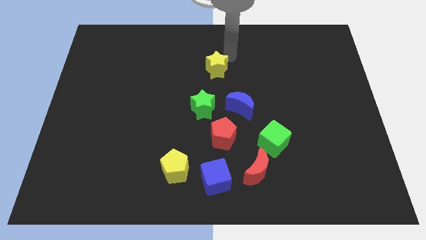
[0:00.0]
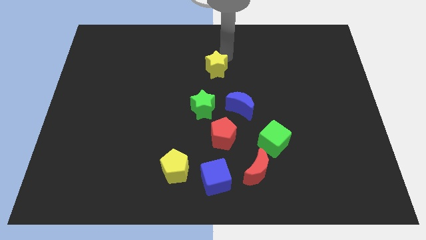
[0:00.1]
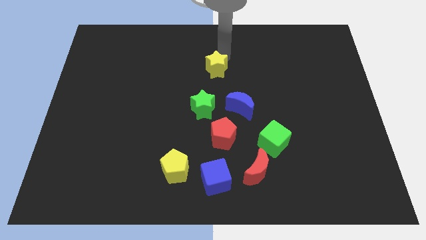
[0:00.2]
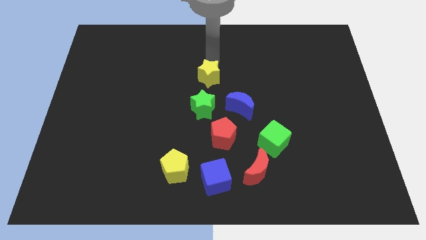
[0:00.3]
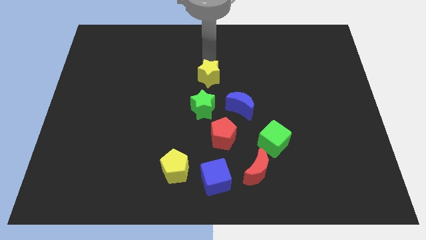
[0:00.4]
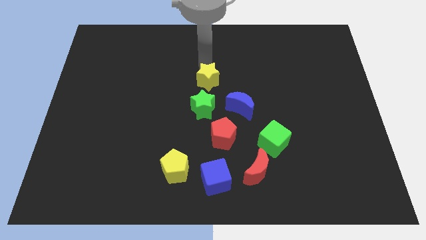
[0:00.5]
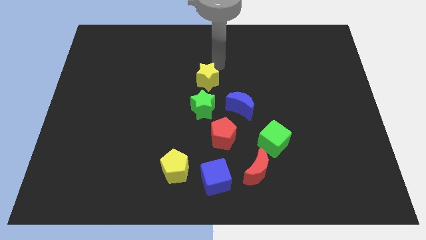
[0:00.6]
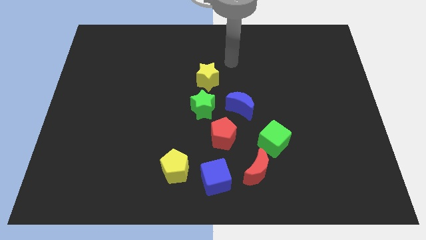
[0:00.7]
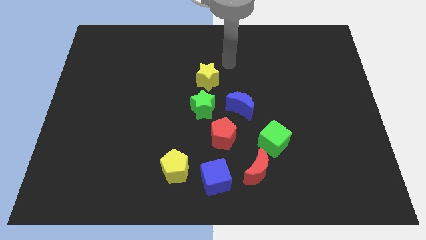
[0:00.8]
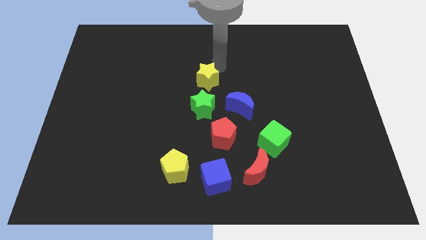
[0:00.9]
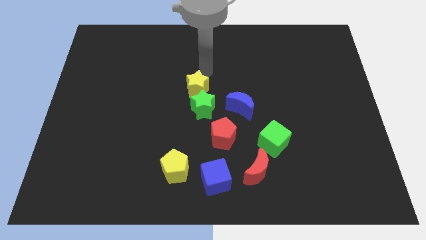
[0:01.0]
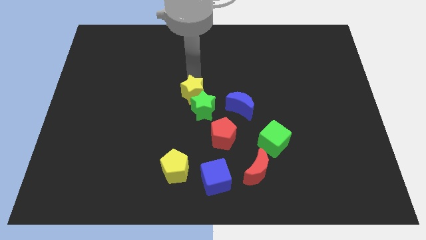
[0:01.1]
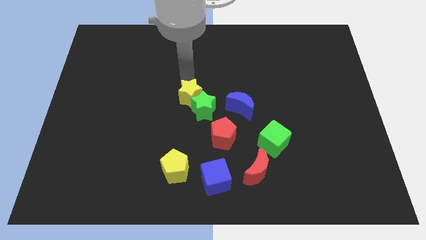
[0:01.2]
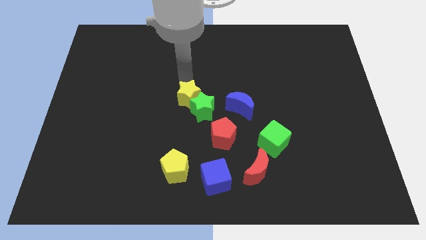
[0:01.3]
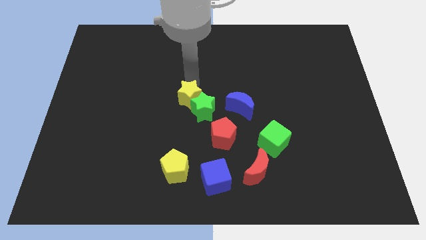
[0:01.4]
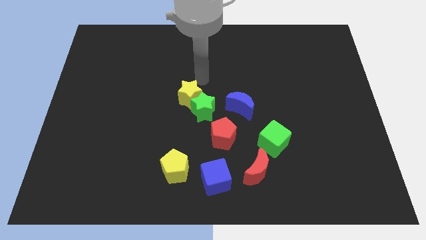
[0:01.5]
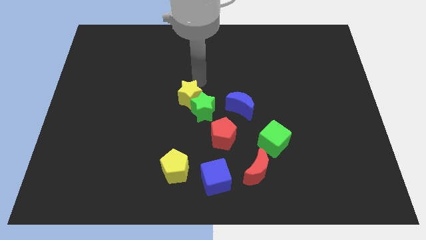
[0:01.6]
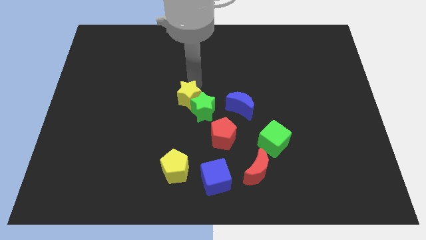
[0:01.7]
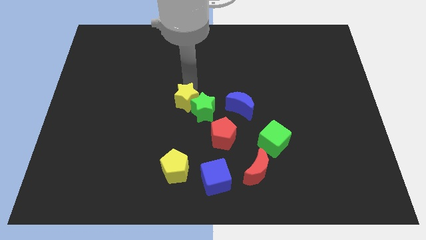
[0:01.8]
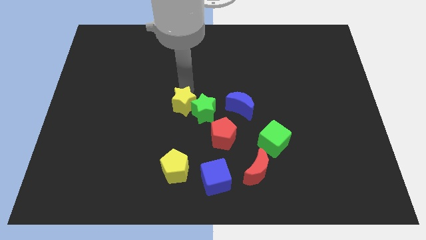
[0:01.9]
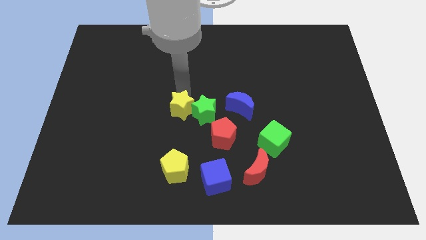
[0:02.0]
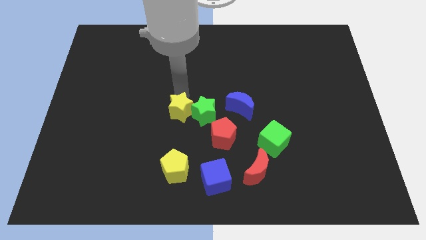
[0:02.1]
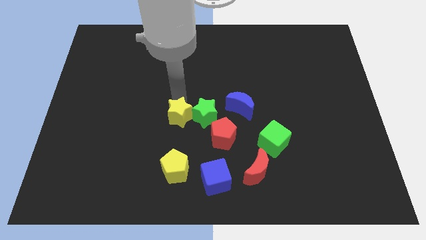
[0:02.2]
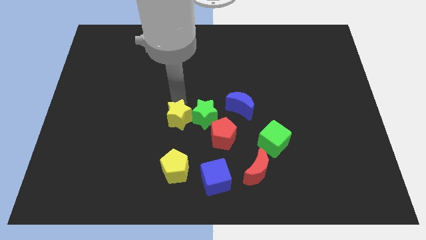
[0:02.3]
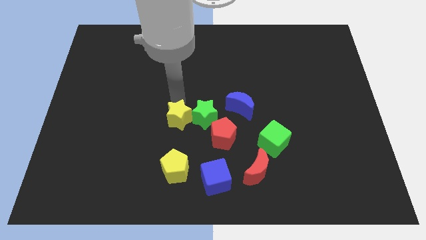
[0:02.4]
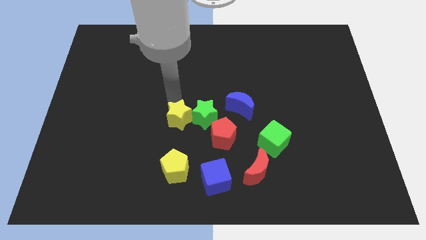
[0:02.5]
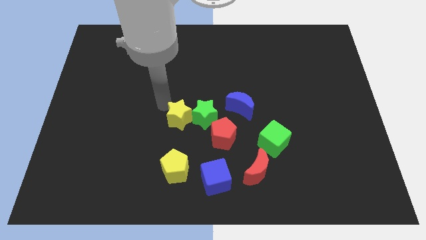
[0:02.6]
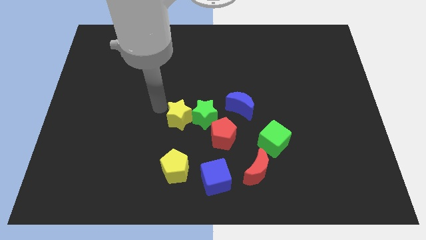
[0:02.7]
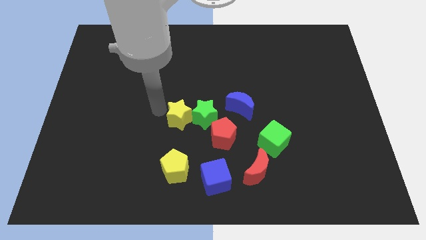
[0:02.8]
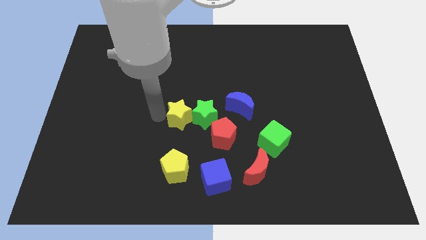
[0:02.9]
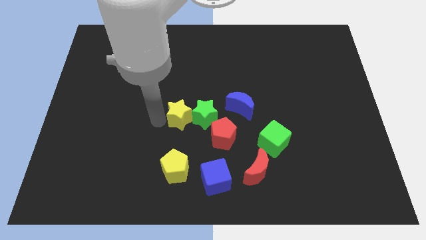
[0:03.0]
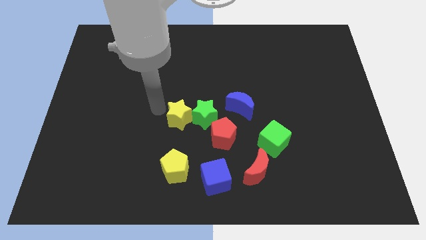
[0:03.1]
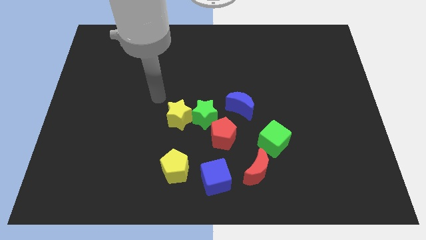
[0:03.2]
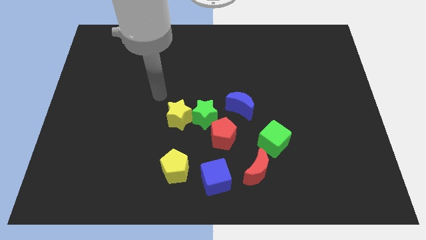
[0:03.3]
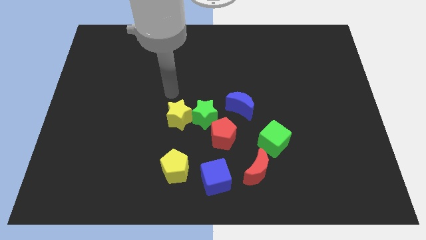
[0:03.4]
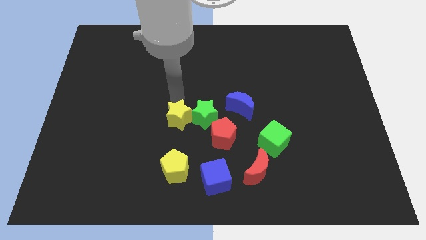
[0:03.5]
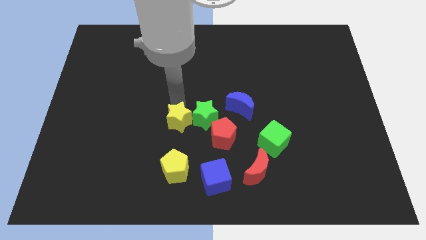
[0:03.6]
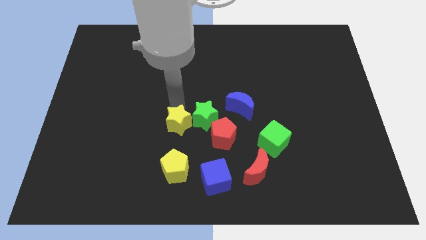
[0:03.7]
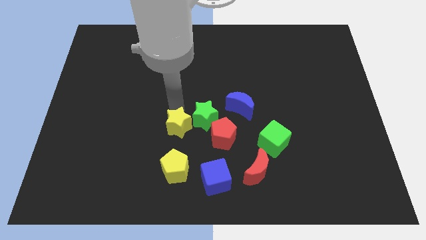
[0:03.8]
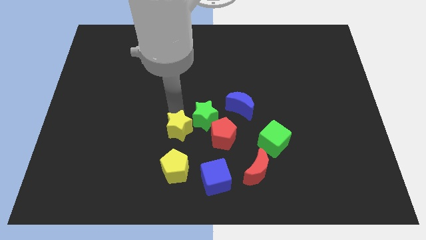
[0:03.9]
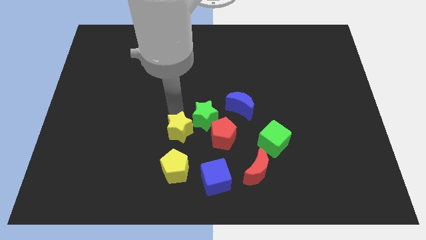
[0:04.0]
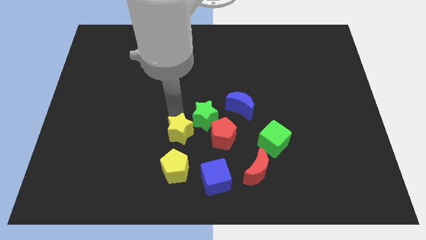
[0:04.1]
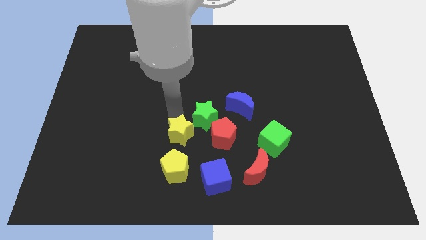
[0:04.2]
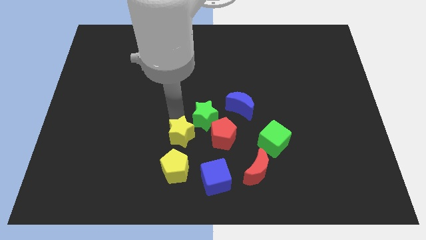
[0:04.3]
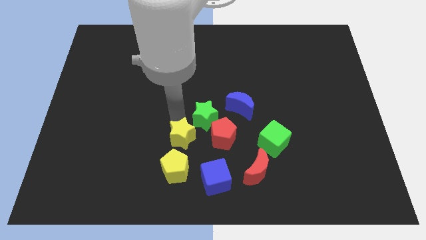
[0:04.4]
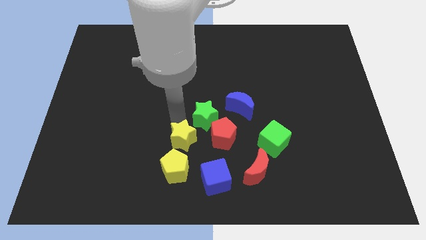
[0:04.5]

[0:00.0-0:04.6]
place the yellow star above the yellow pentagon

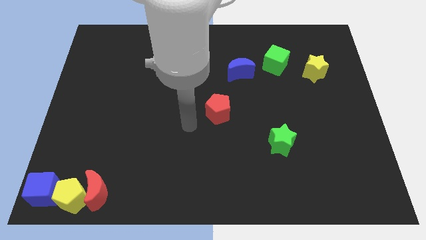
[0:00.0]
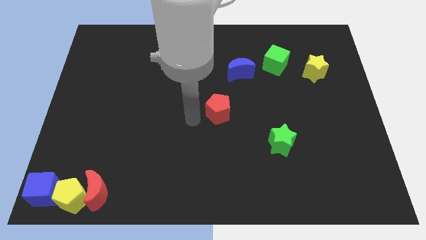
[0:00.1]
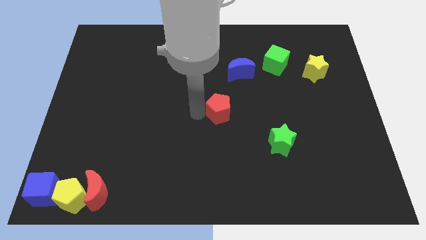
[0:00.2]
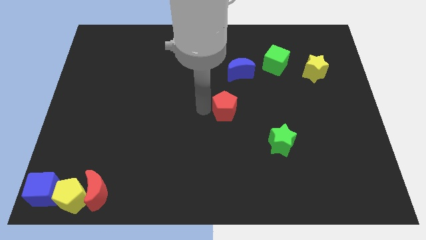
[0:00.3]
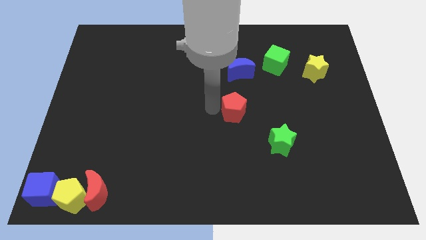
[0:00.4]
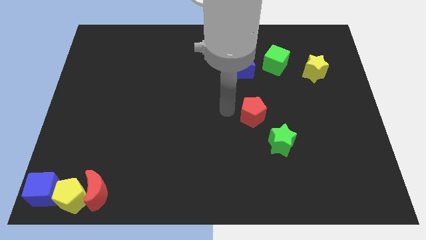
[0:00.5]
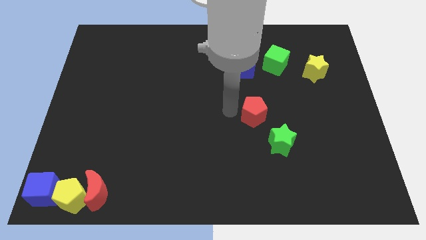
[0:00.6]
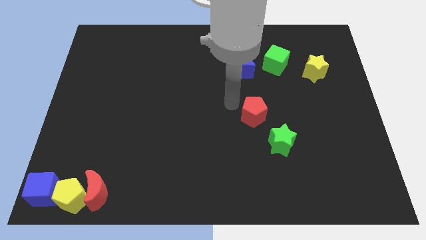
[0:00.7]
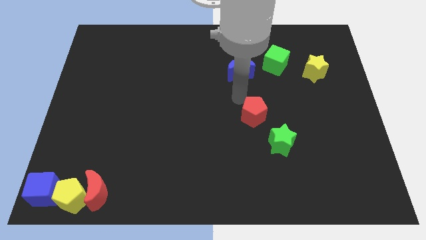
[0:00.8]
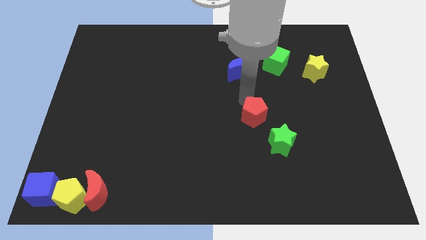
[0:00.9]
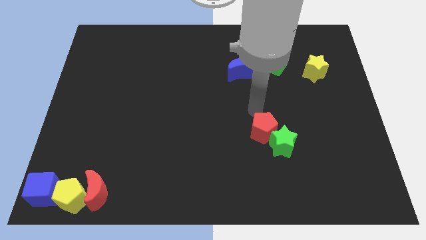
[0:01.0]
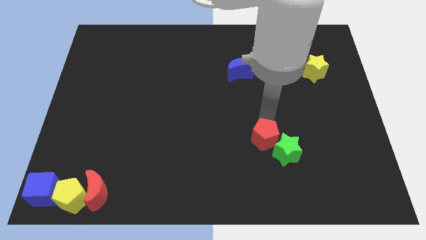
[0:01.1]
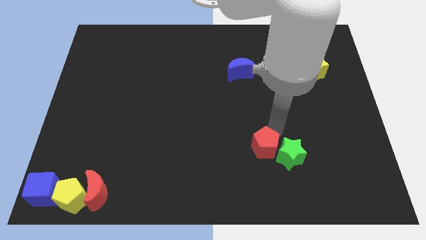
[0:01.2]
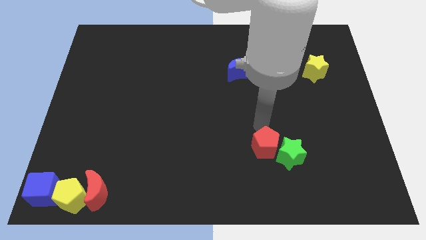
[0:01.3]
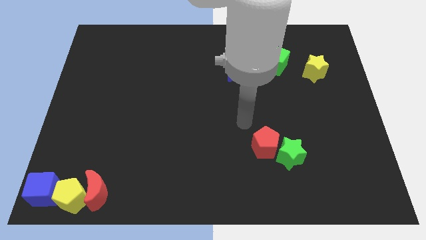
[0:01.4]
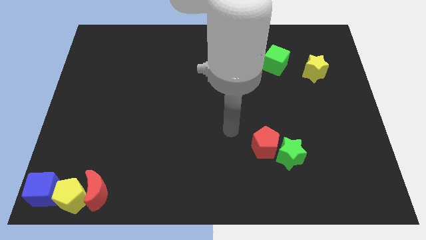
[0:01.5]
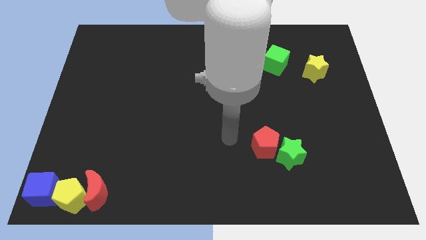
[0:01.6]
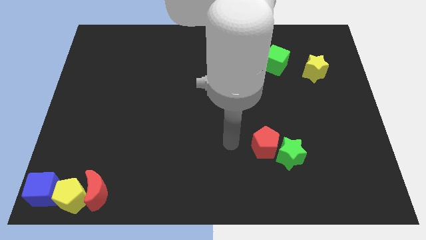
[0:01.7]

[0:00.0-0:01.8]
push the red pentagon into the green star

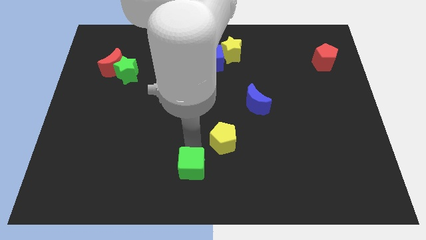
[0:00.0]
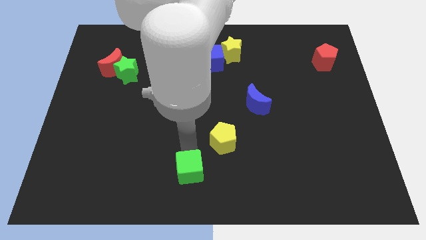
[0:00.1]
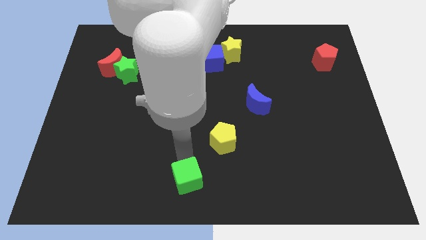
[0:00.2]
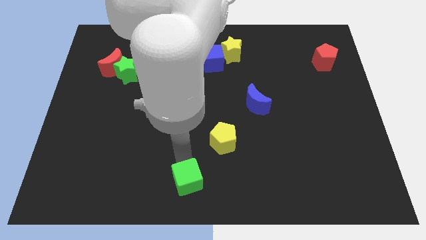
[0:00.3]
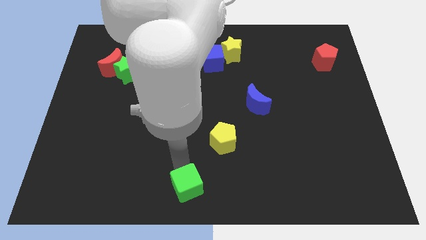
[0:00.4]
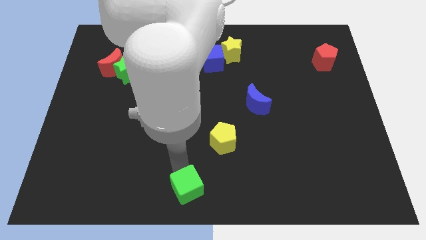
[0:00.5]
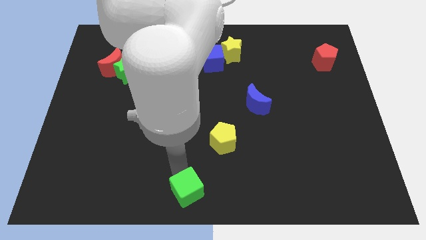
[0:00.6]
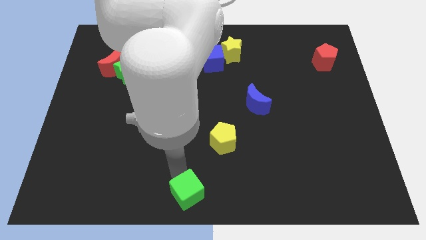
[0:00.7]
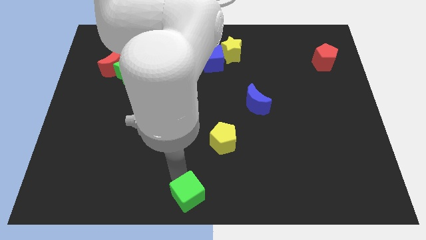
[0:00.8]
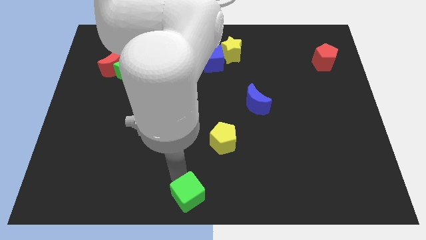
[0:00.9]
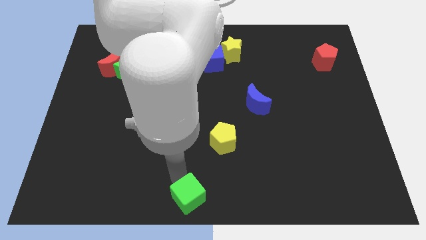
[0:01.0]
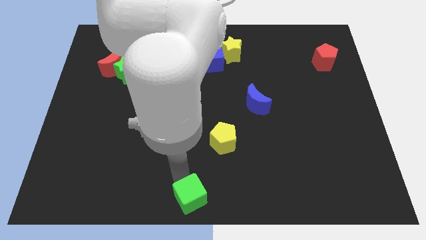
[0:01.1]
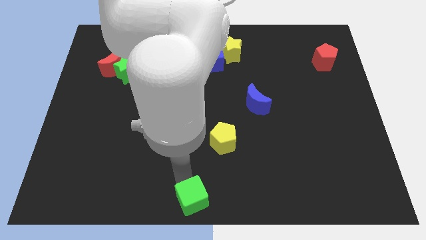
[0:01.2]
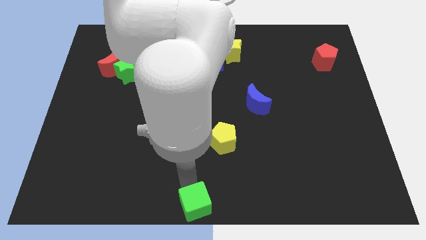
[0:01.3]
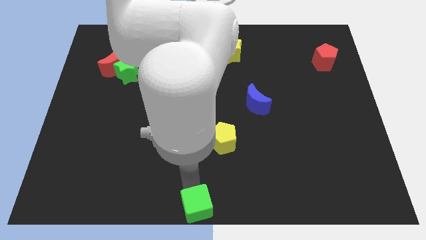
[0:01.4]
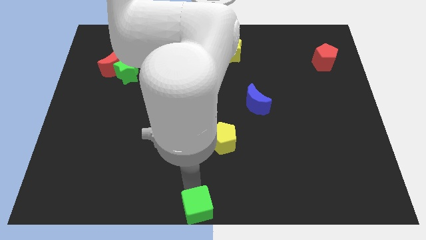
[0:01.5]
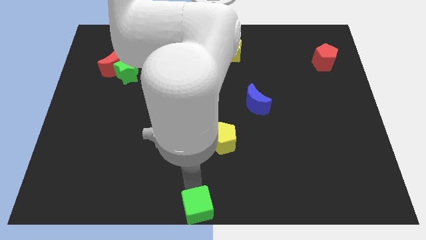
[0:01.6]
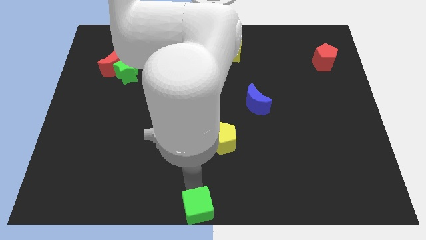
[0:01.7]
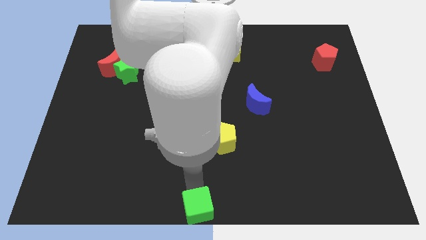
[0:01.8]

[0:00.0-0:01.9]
move the green cube to the bottom center of the board

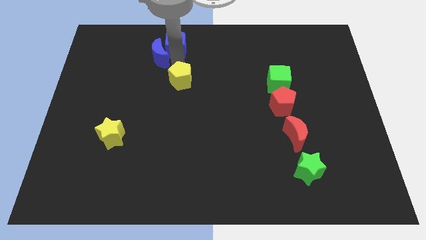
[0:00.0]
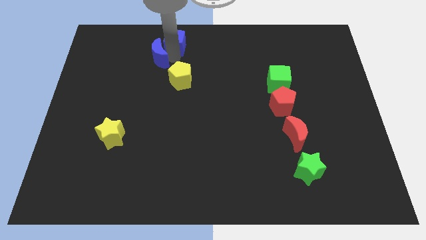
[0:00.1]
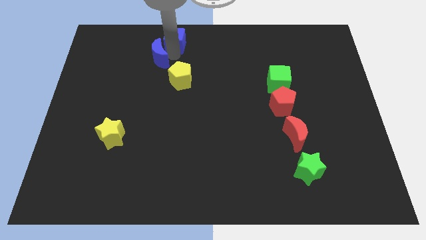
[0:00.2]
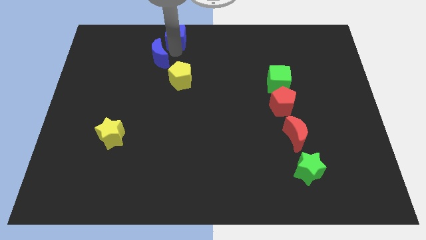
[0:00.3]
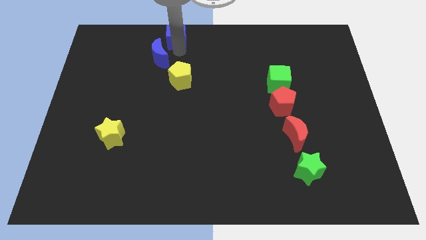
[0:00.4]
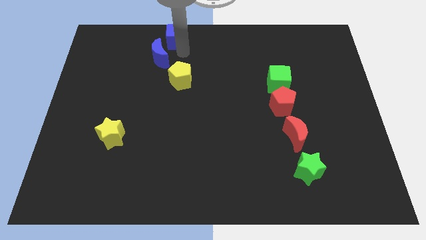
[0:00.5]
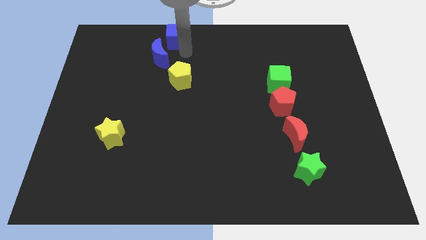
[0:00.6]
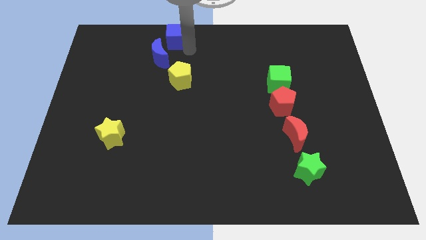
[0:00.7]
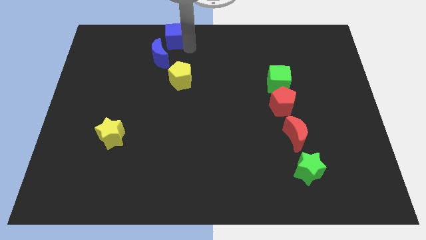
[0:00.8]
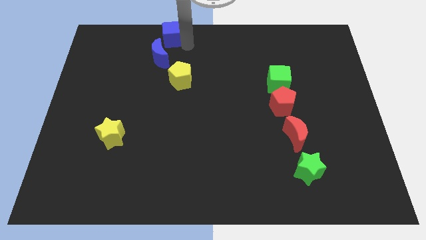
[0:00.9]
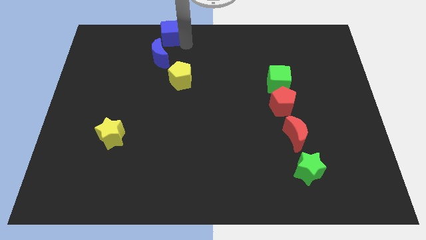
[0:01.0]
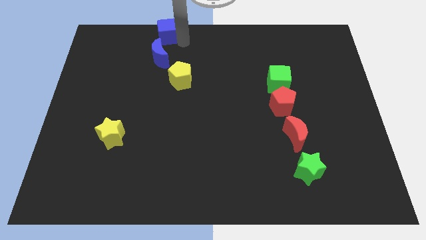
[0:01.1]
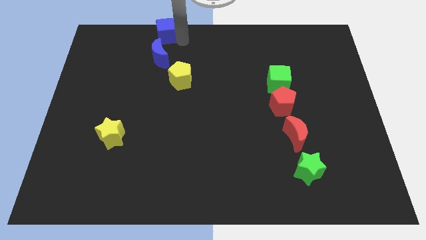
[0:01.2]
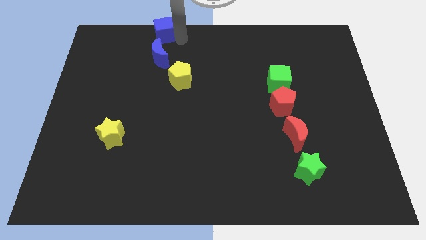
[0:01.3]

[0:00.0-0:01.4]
place blue cube above the blue crescent
